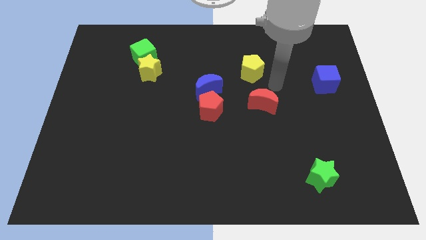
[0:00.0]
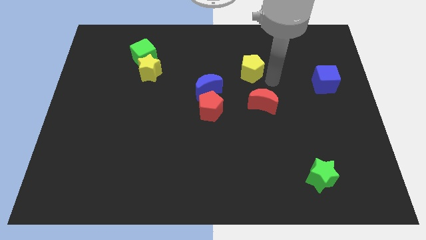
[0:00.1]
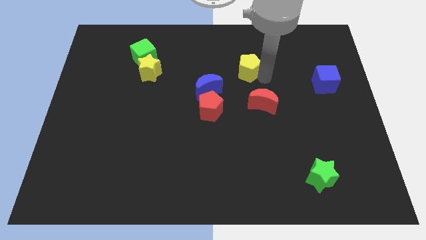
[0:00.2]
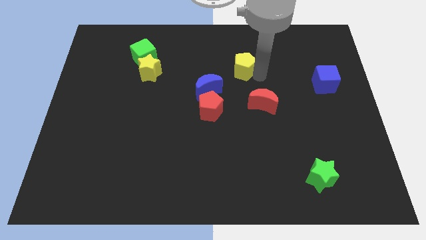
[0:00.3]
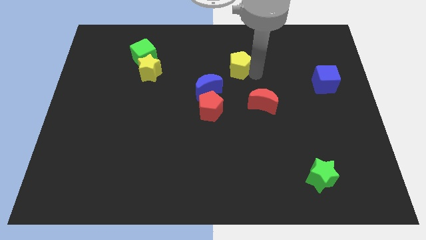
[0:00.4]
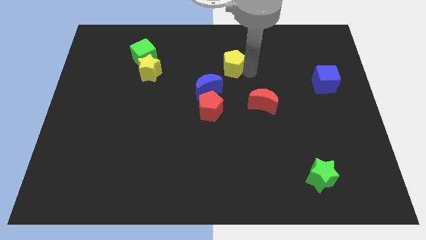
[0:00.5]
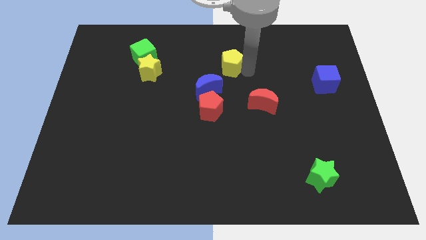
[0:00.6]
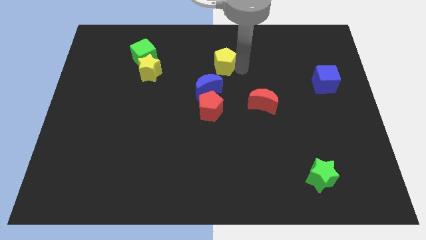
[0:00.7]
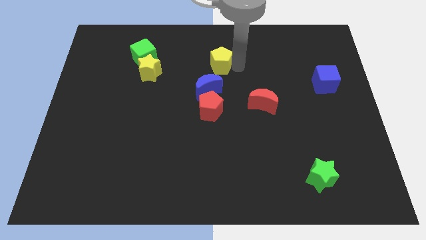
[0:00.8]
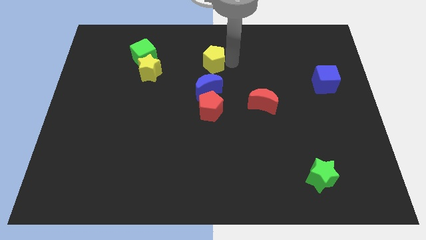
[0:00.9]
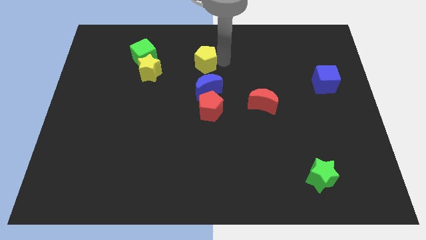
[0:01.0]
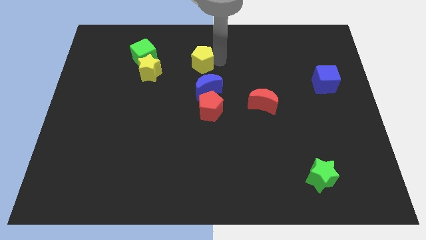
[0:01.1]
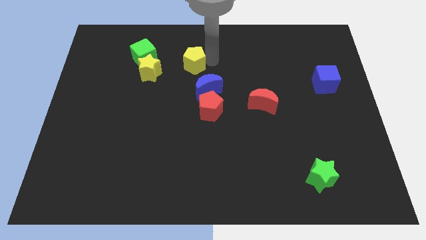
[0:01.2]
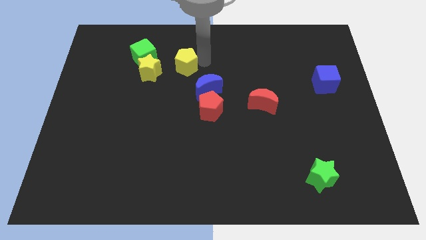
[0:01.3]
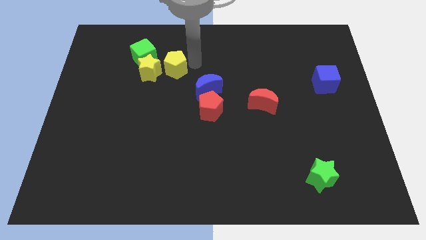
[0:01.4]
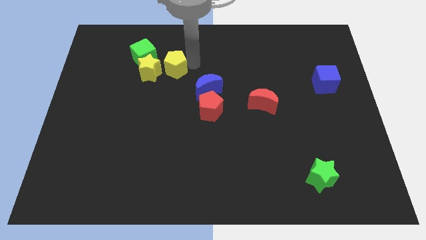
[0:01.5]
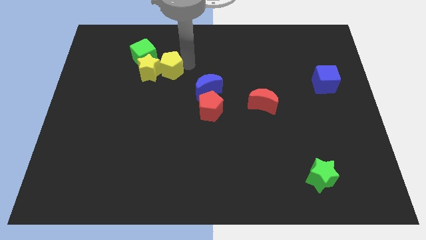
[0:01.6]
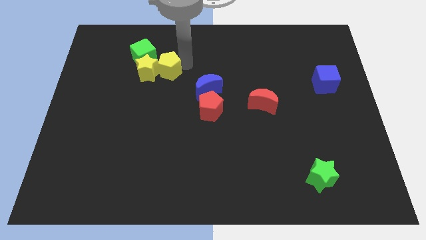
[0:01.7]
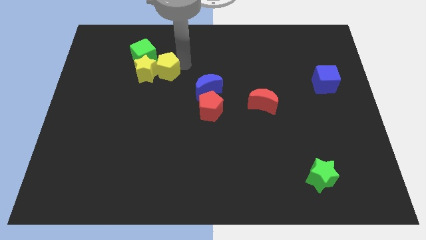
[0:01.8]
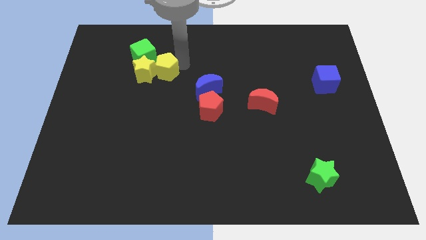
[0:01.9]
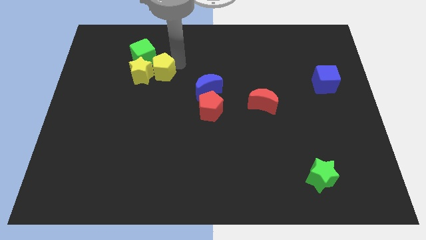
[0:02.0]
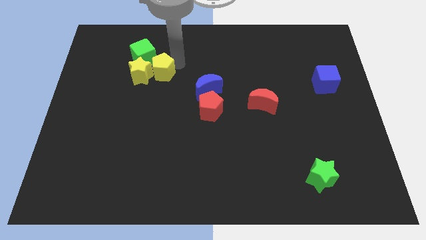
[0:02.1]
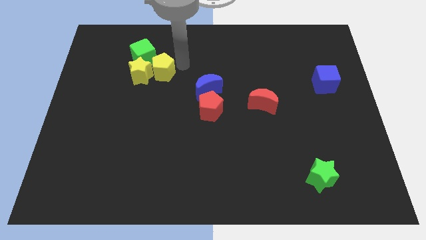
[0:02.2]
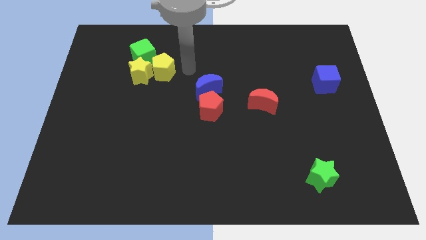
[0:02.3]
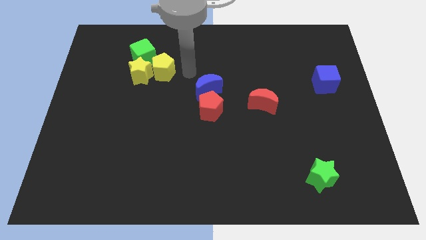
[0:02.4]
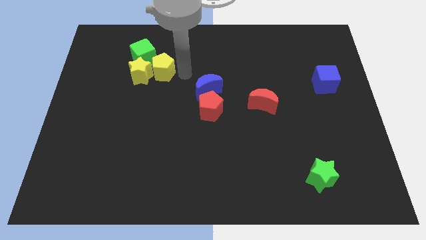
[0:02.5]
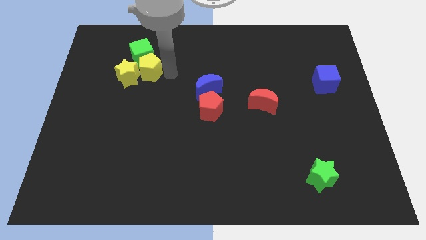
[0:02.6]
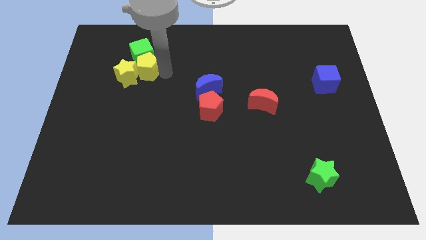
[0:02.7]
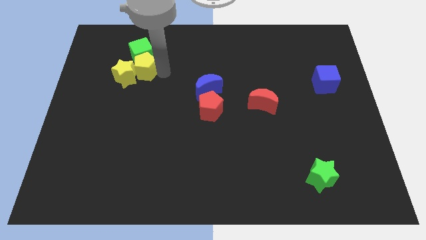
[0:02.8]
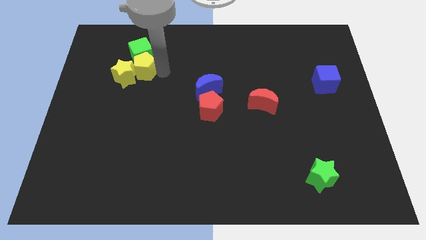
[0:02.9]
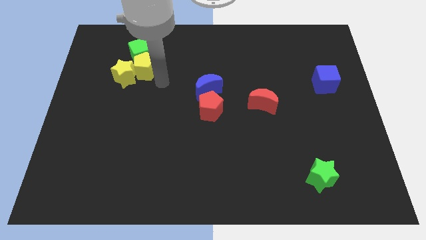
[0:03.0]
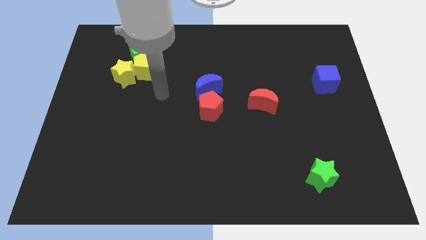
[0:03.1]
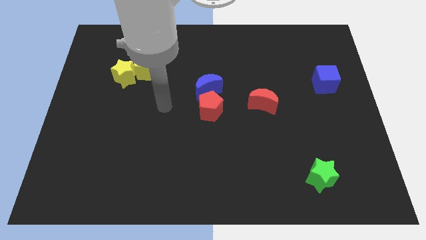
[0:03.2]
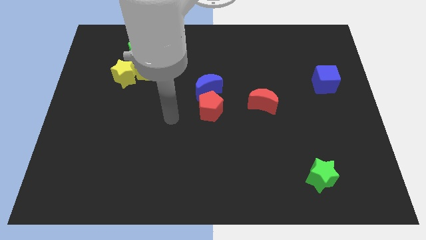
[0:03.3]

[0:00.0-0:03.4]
push the yellow pentagon into the yellow star

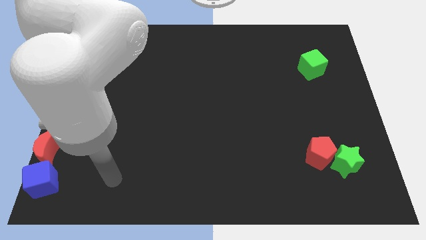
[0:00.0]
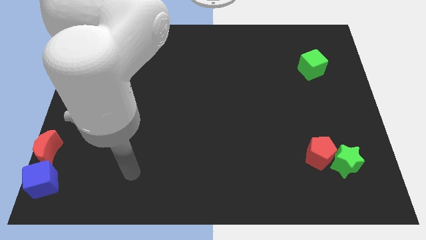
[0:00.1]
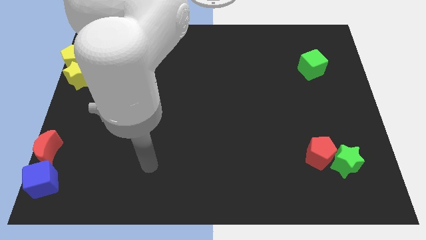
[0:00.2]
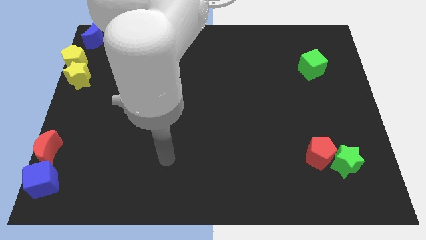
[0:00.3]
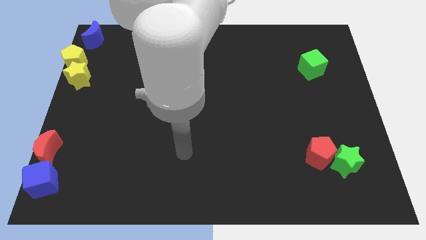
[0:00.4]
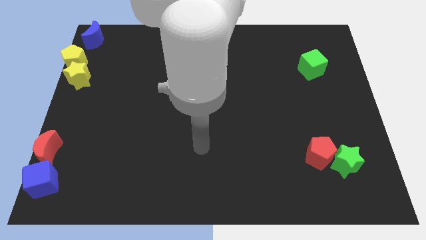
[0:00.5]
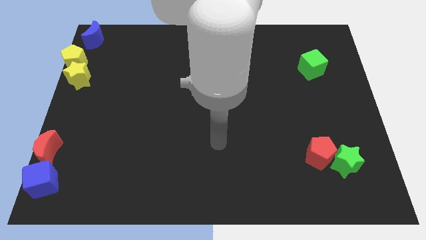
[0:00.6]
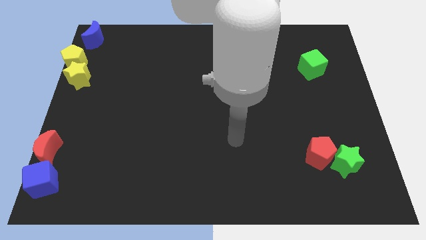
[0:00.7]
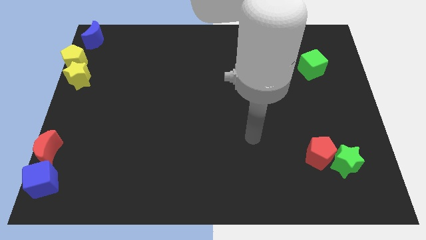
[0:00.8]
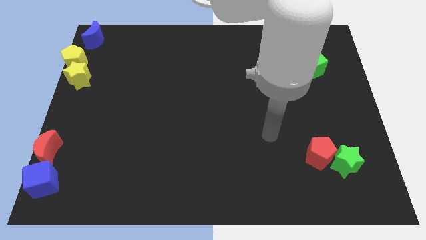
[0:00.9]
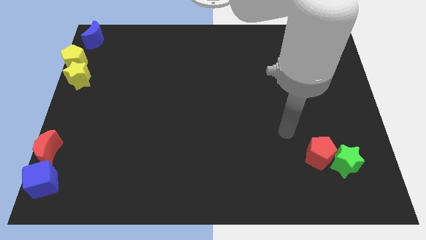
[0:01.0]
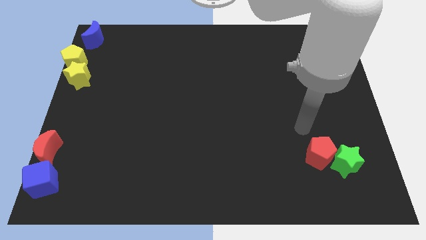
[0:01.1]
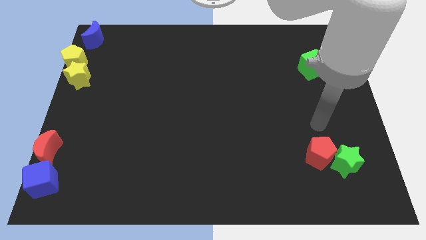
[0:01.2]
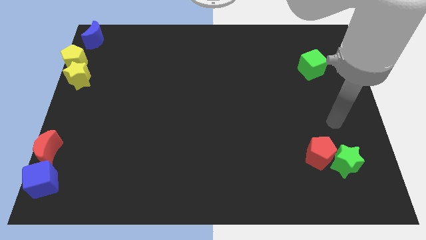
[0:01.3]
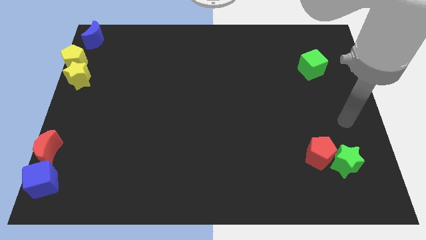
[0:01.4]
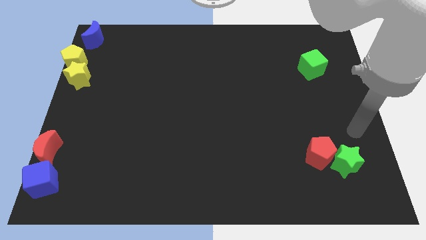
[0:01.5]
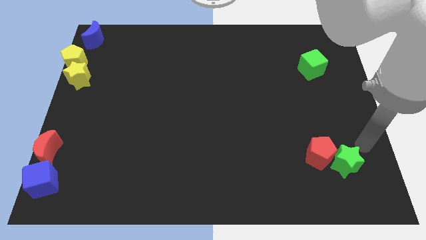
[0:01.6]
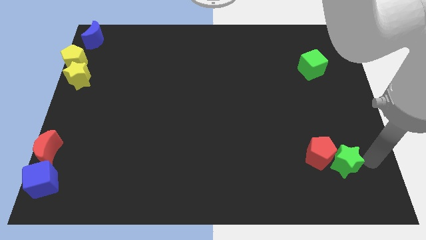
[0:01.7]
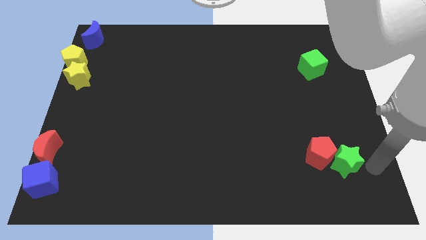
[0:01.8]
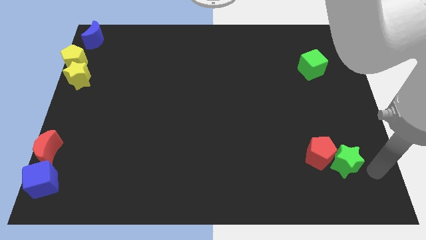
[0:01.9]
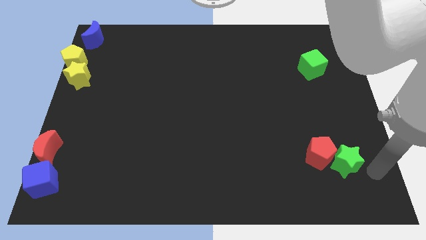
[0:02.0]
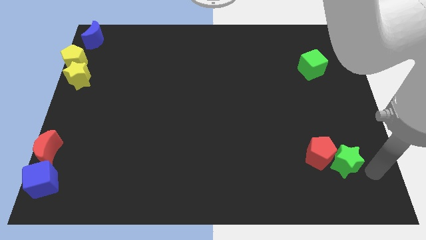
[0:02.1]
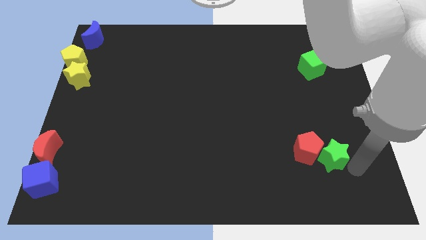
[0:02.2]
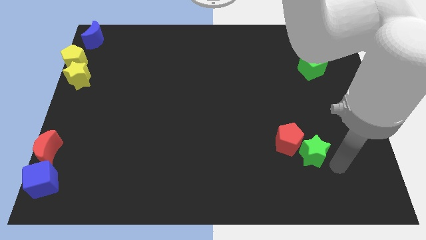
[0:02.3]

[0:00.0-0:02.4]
move the green star into the red pentagon

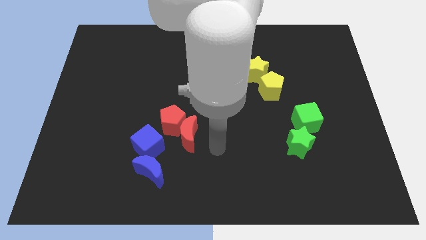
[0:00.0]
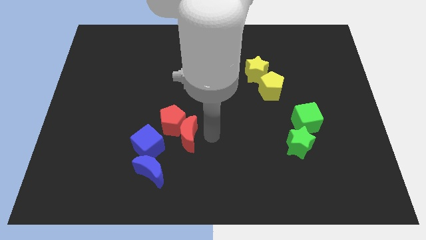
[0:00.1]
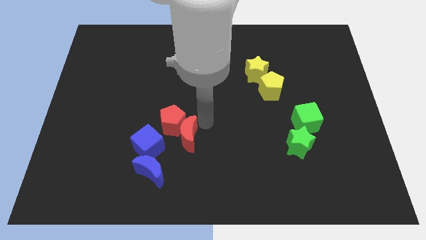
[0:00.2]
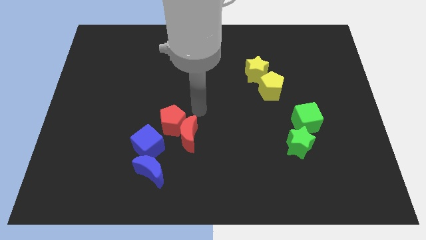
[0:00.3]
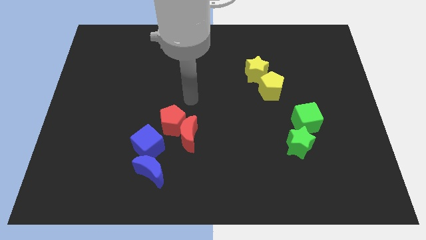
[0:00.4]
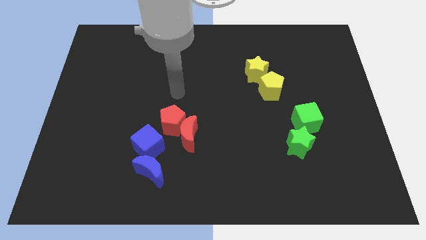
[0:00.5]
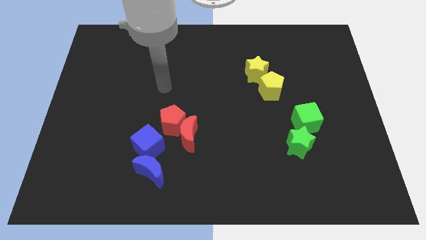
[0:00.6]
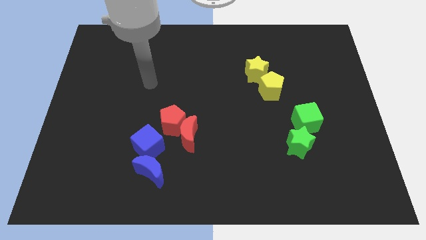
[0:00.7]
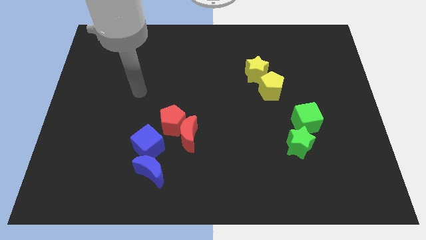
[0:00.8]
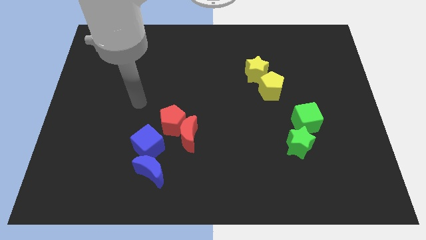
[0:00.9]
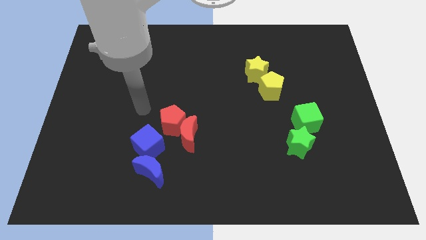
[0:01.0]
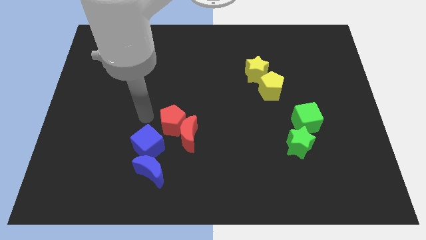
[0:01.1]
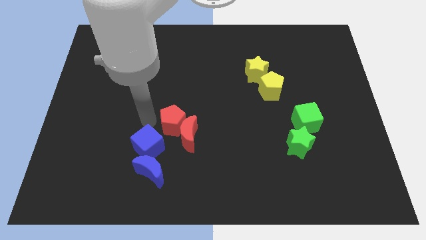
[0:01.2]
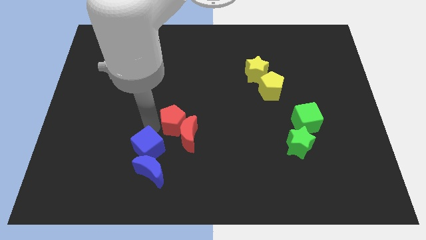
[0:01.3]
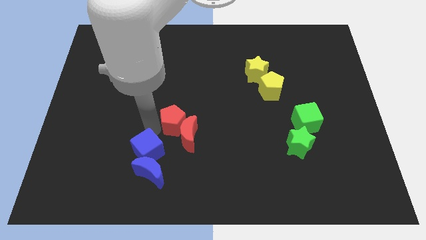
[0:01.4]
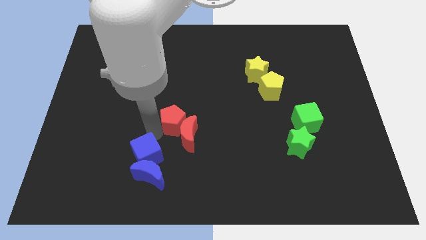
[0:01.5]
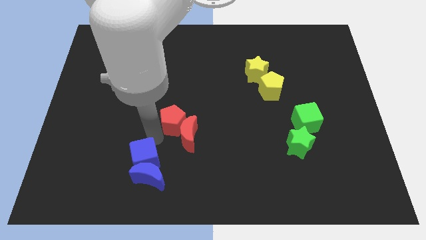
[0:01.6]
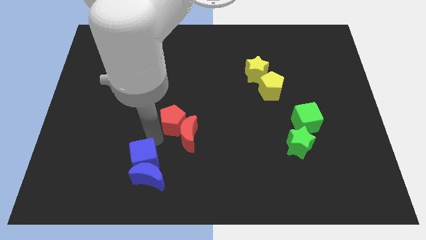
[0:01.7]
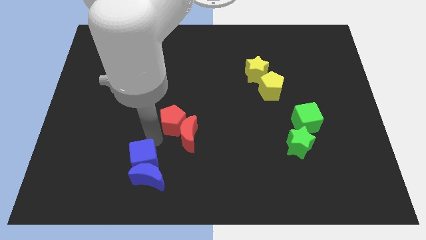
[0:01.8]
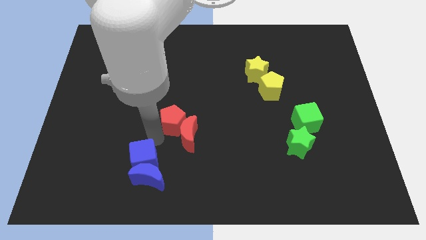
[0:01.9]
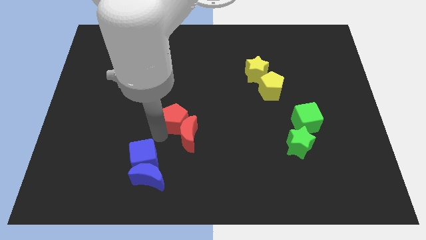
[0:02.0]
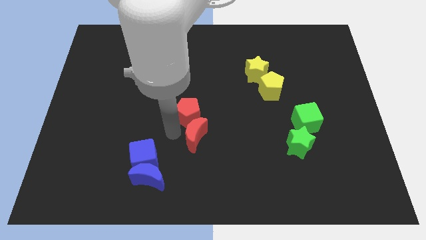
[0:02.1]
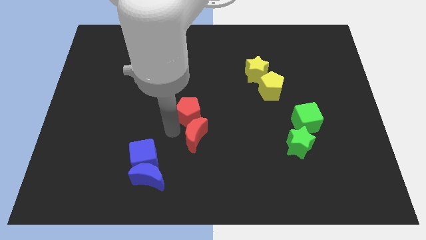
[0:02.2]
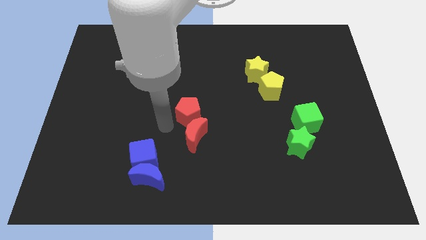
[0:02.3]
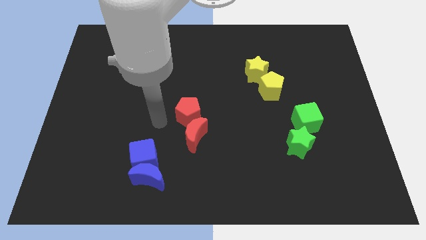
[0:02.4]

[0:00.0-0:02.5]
separate the blue and red blocks from each other

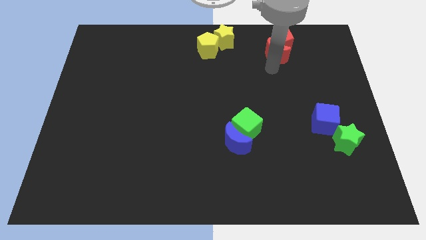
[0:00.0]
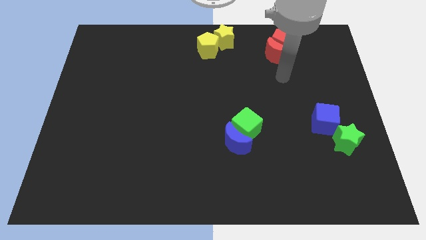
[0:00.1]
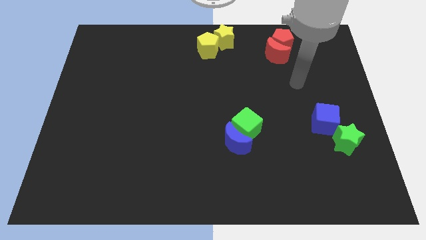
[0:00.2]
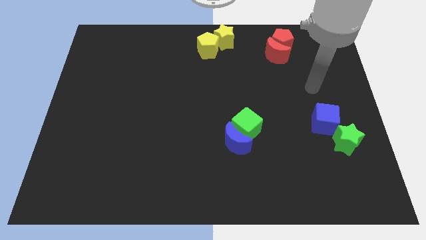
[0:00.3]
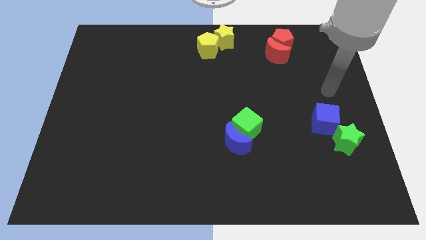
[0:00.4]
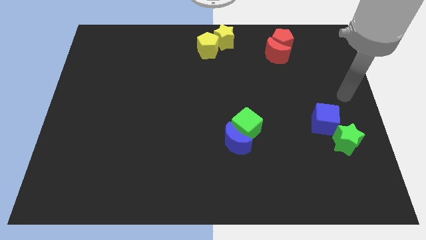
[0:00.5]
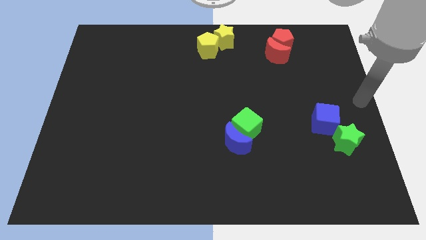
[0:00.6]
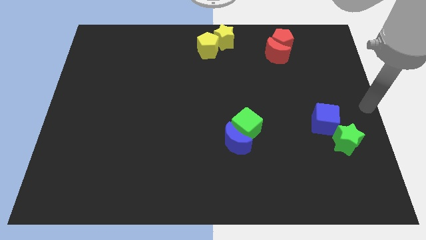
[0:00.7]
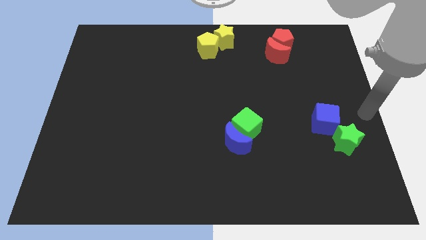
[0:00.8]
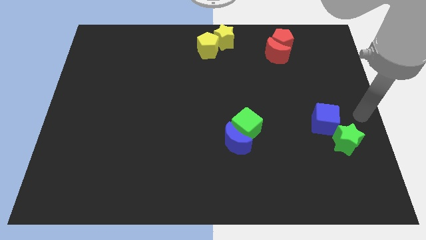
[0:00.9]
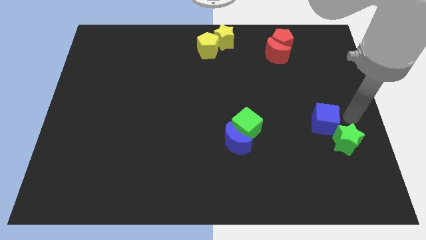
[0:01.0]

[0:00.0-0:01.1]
point your arm to the right side of blue cube
